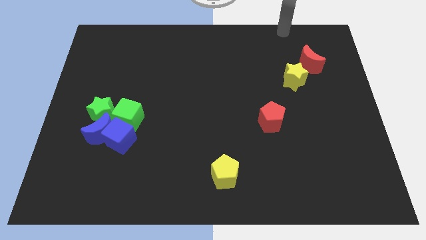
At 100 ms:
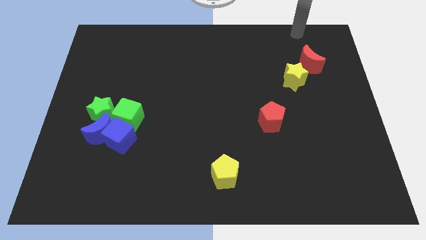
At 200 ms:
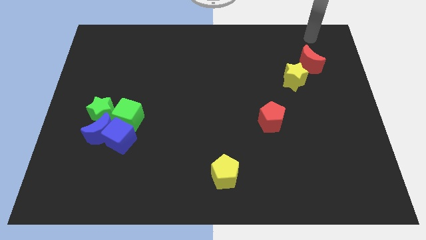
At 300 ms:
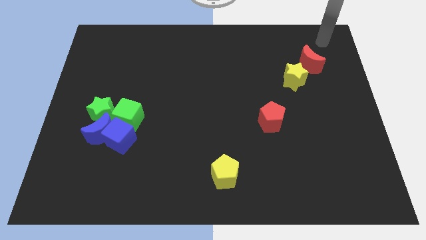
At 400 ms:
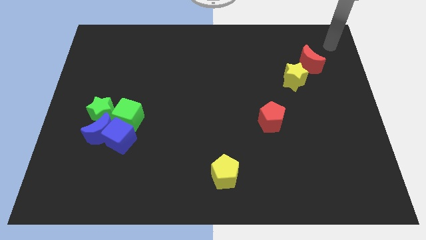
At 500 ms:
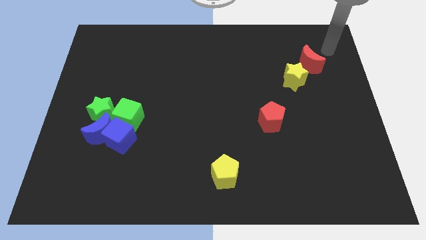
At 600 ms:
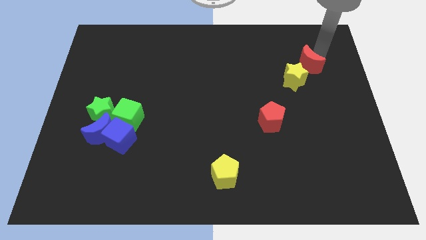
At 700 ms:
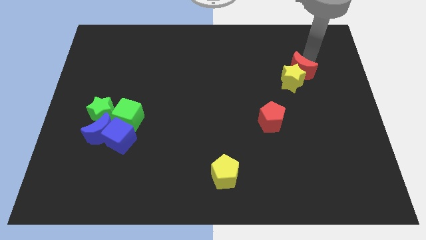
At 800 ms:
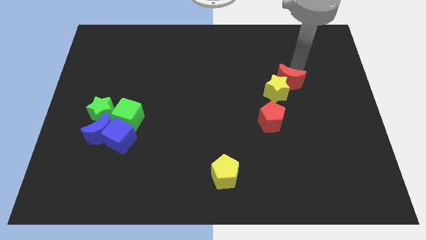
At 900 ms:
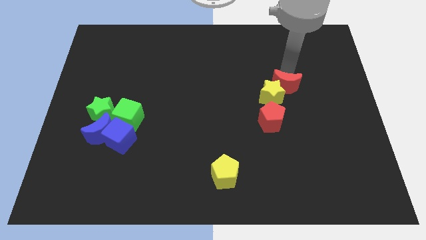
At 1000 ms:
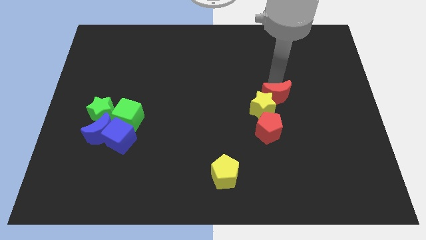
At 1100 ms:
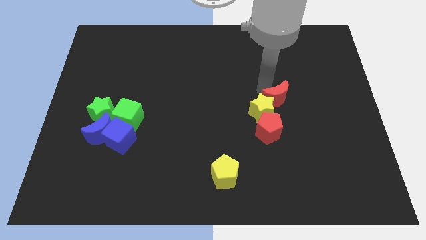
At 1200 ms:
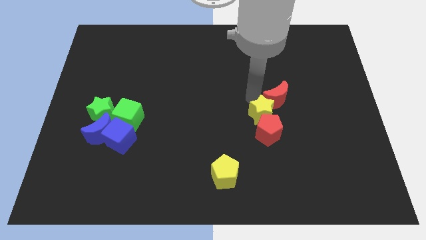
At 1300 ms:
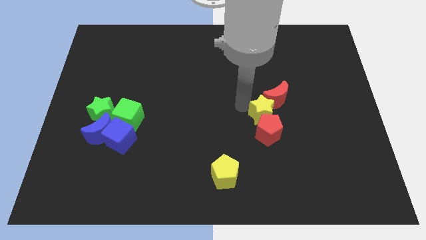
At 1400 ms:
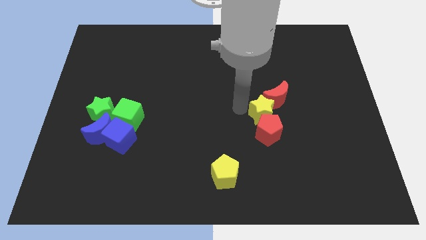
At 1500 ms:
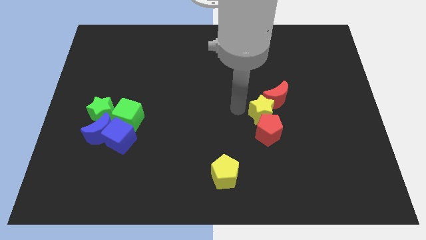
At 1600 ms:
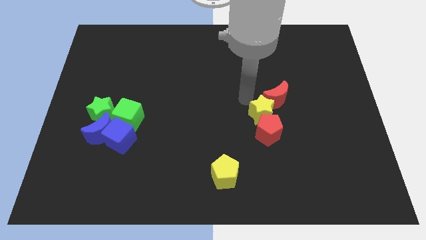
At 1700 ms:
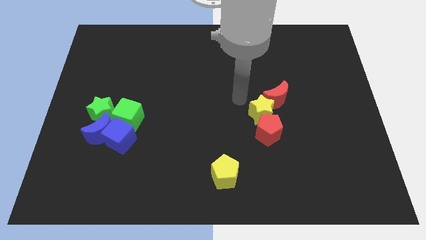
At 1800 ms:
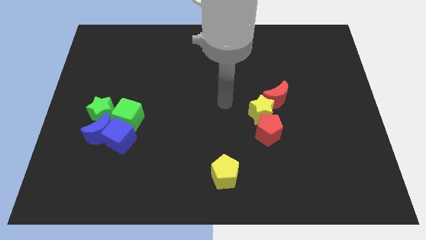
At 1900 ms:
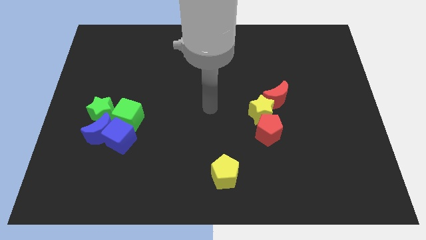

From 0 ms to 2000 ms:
push the yellow star with red moon

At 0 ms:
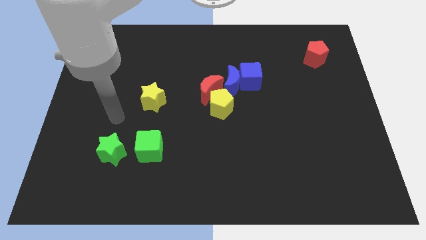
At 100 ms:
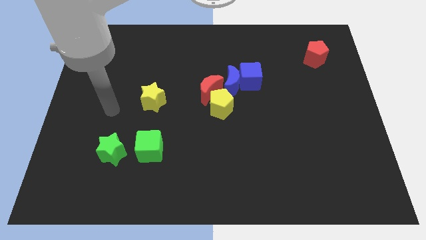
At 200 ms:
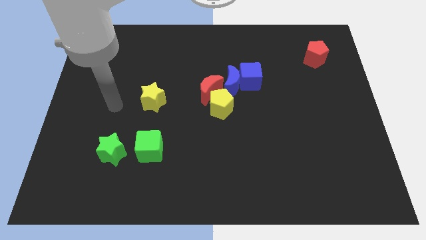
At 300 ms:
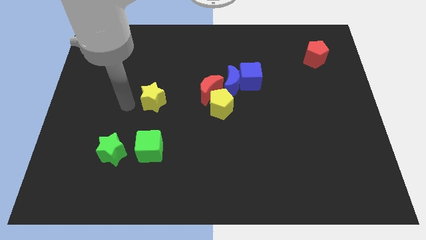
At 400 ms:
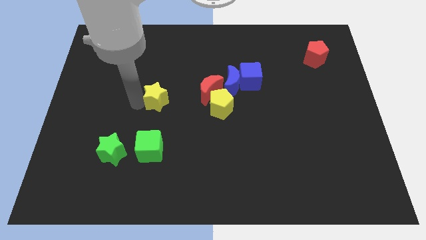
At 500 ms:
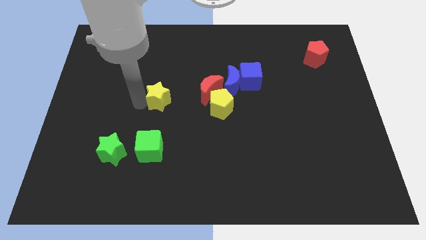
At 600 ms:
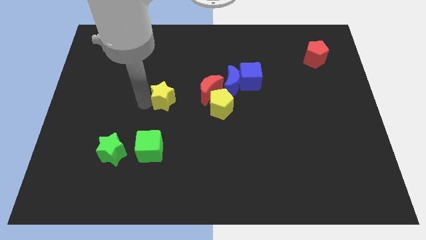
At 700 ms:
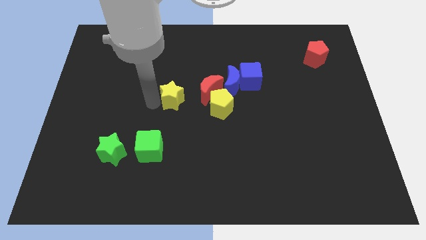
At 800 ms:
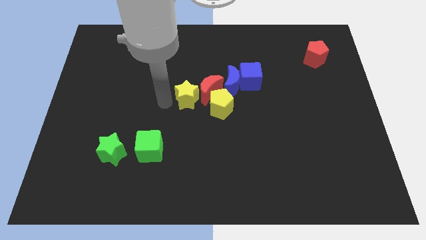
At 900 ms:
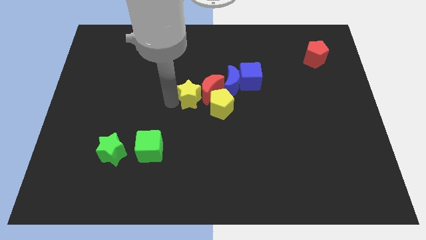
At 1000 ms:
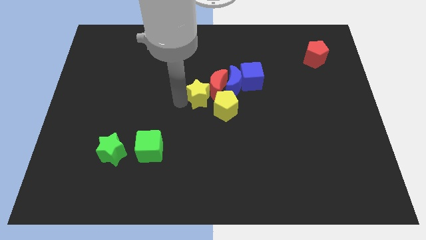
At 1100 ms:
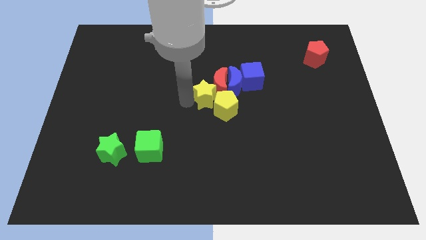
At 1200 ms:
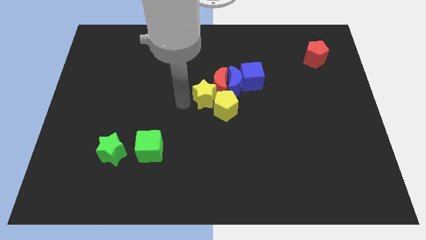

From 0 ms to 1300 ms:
push the yellow star into the red crescent

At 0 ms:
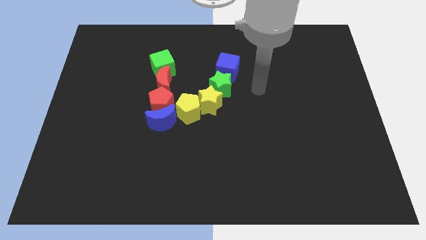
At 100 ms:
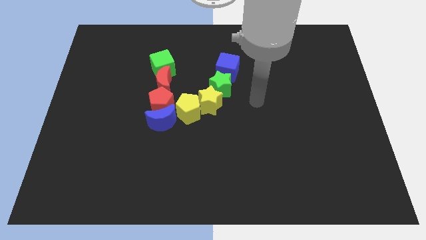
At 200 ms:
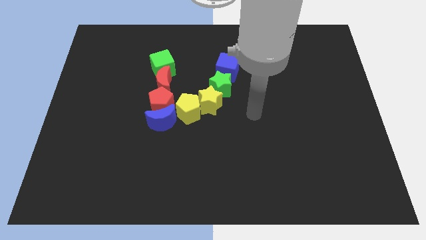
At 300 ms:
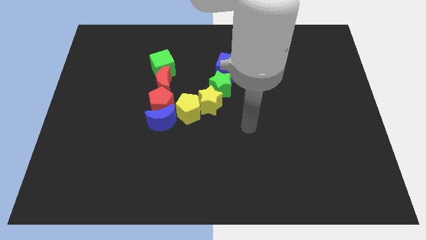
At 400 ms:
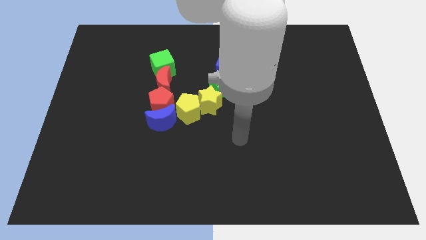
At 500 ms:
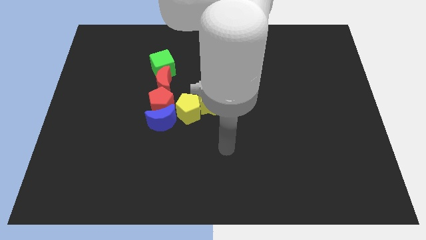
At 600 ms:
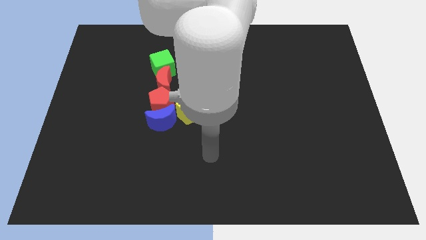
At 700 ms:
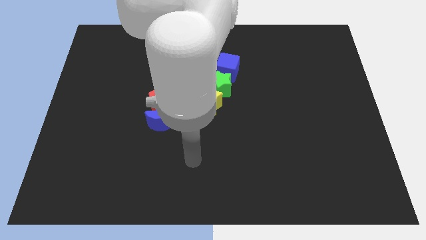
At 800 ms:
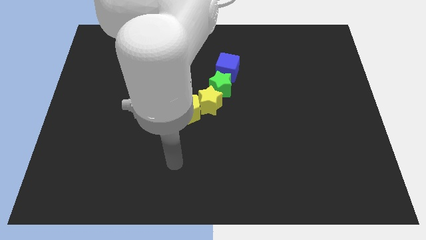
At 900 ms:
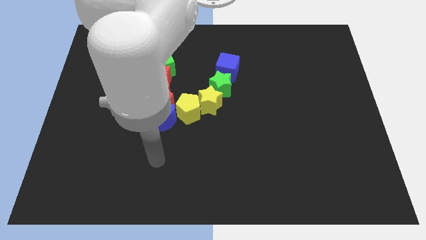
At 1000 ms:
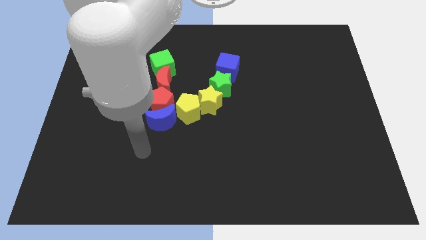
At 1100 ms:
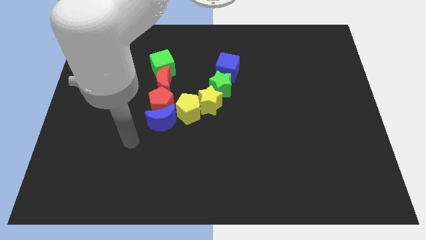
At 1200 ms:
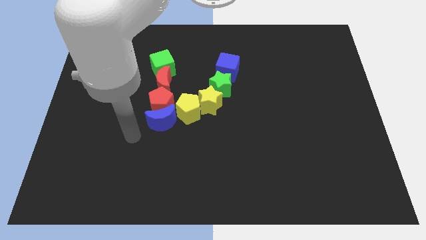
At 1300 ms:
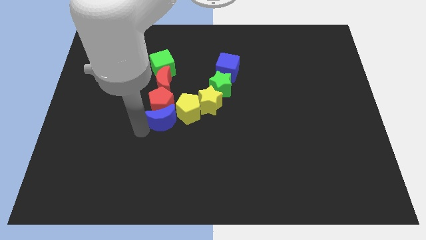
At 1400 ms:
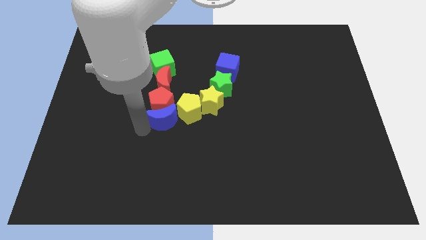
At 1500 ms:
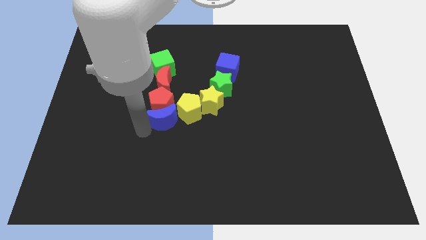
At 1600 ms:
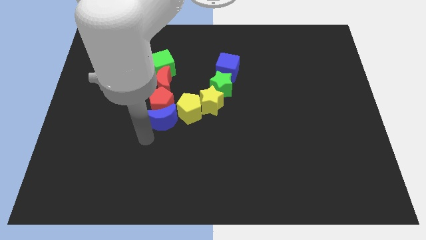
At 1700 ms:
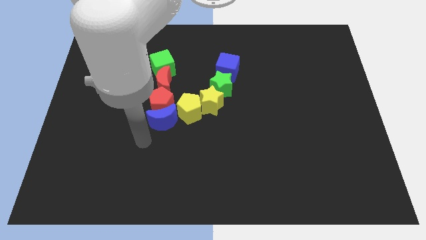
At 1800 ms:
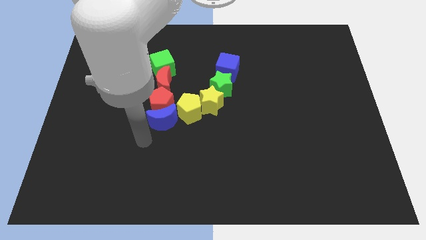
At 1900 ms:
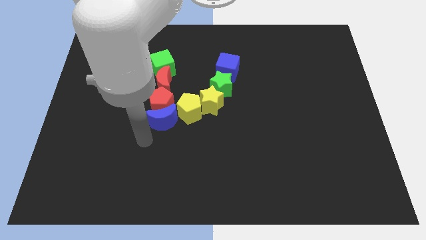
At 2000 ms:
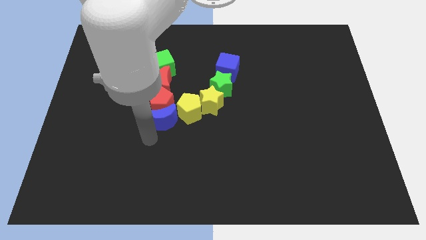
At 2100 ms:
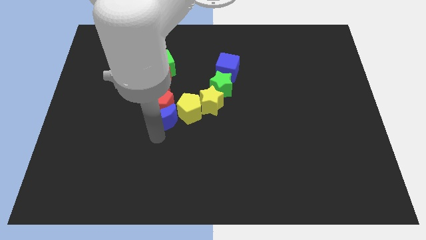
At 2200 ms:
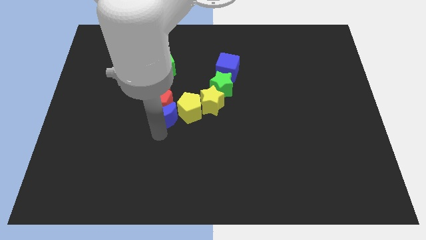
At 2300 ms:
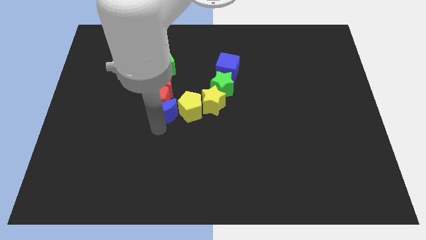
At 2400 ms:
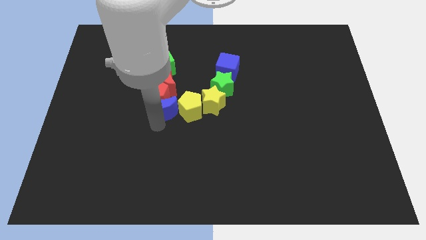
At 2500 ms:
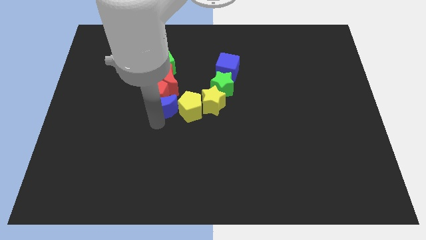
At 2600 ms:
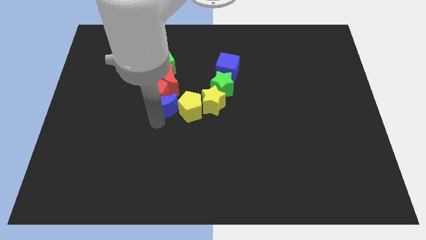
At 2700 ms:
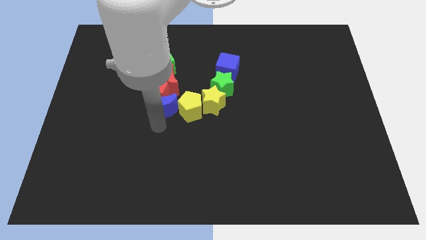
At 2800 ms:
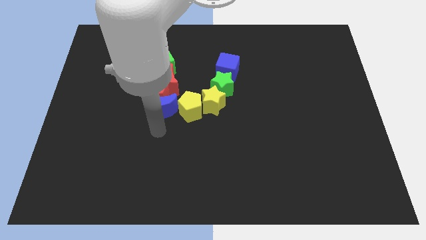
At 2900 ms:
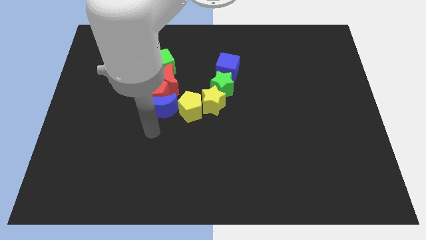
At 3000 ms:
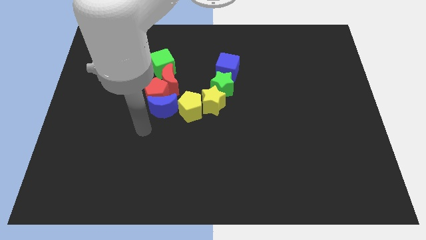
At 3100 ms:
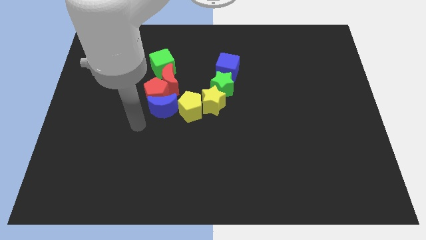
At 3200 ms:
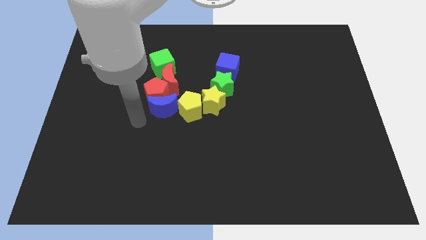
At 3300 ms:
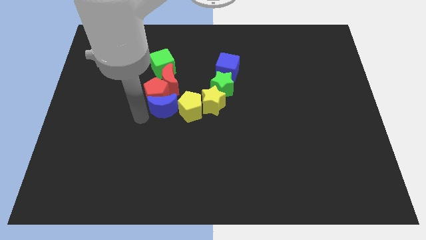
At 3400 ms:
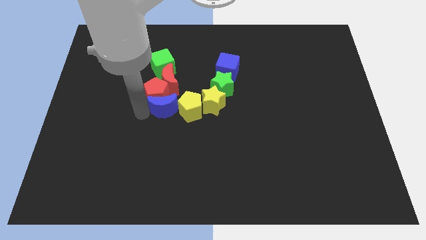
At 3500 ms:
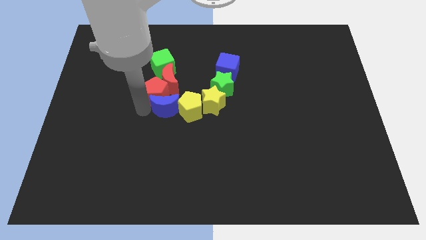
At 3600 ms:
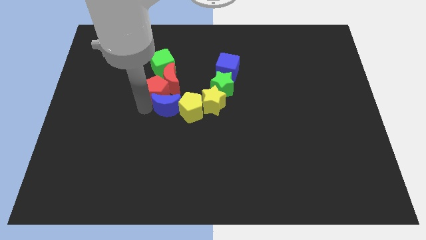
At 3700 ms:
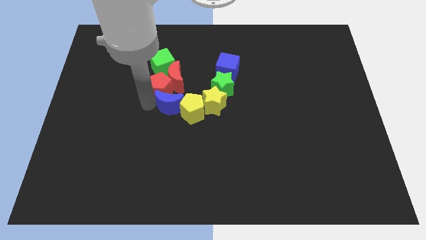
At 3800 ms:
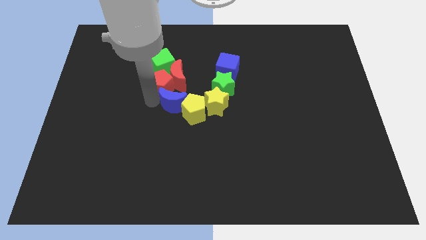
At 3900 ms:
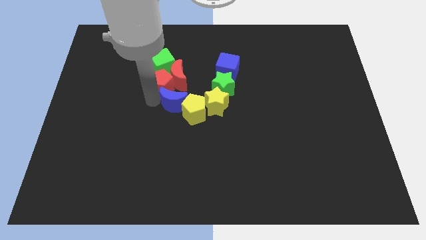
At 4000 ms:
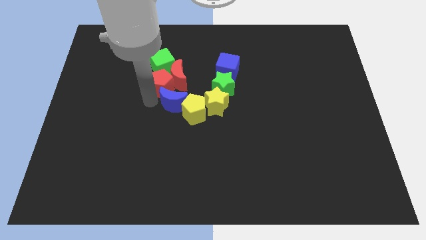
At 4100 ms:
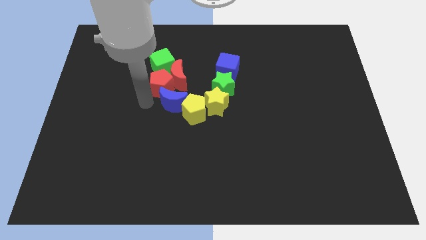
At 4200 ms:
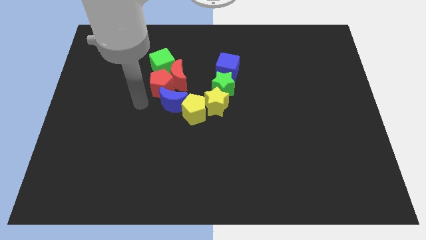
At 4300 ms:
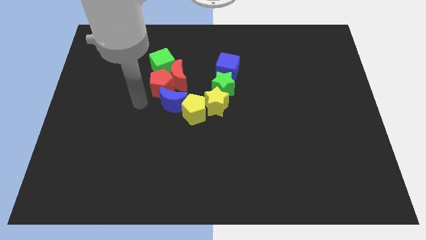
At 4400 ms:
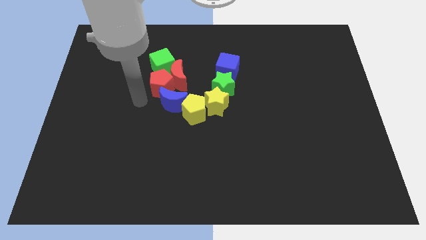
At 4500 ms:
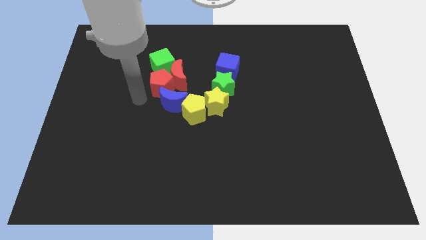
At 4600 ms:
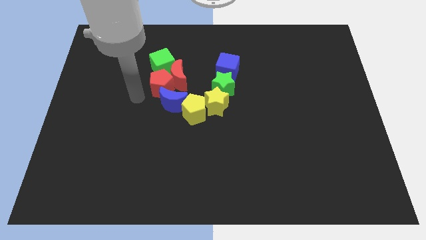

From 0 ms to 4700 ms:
push the blue cresecent along with the red pentagon

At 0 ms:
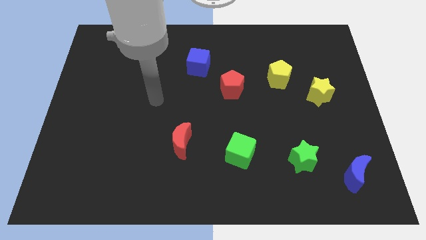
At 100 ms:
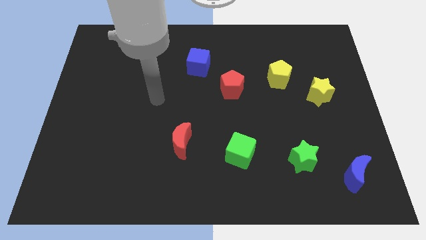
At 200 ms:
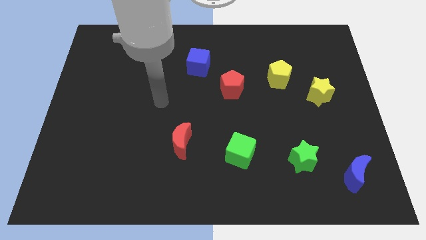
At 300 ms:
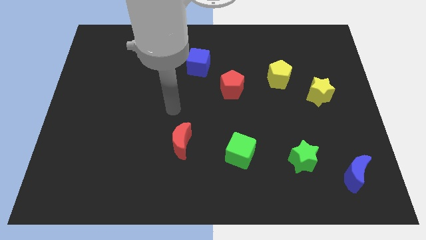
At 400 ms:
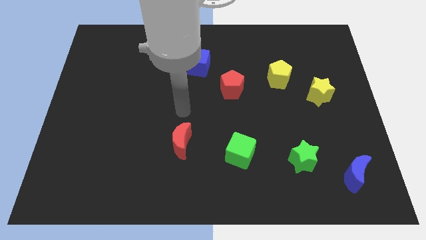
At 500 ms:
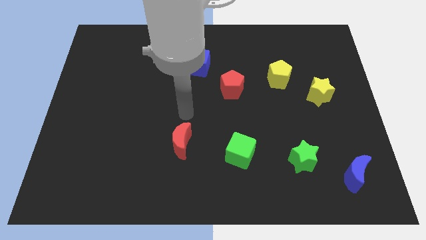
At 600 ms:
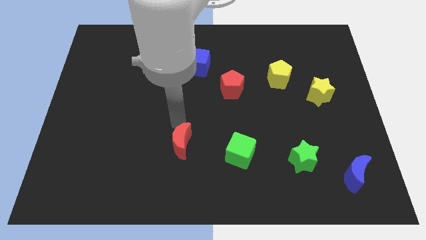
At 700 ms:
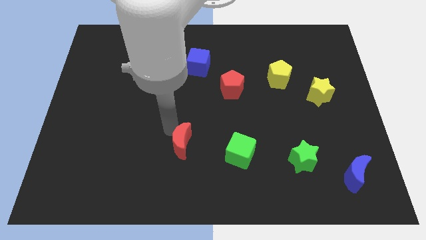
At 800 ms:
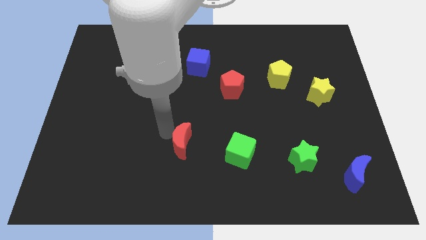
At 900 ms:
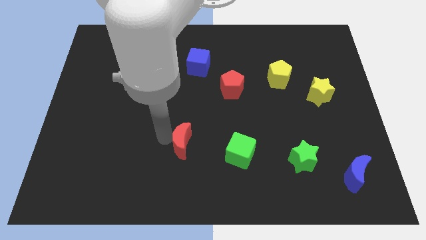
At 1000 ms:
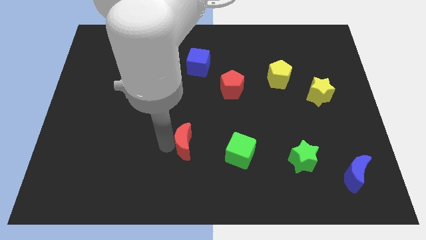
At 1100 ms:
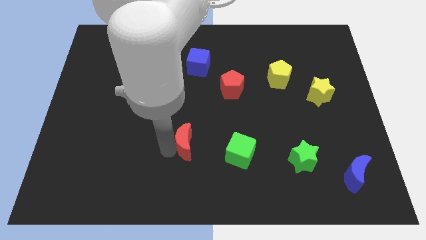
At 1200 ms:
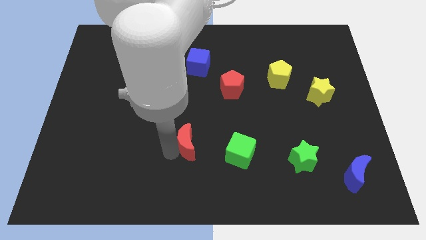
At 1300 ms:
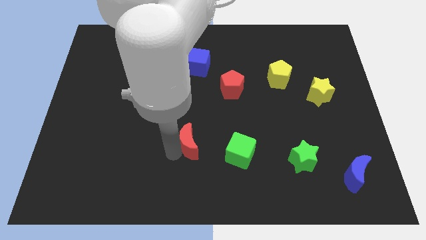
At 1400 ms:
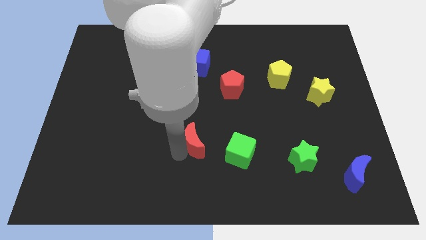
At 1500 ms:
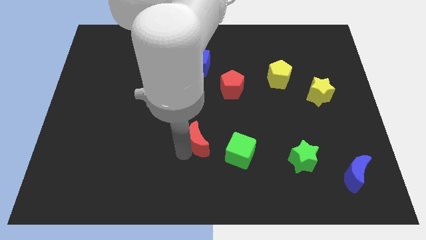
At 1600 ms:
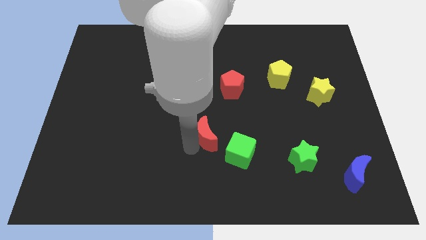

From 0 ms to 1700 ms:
push the red crescent towards the green cube
